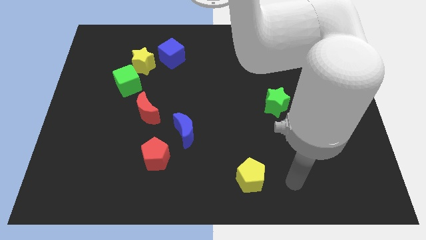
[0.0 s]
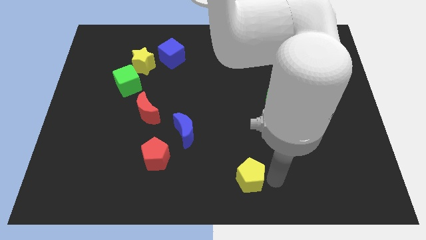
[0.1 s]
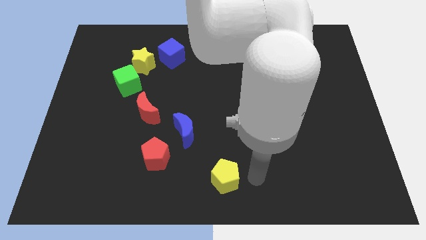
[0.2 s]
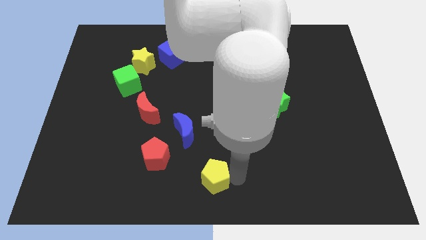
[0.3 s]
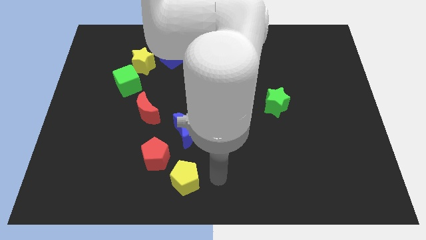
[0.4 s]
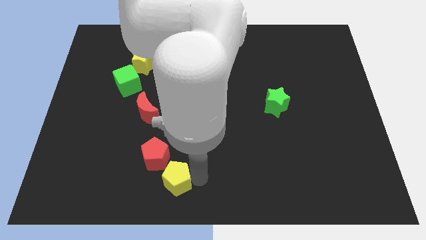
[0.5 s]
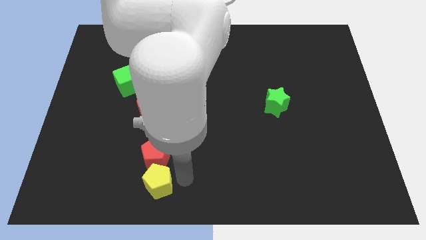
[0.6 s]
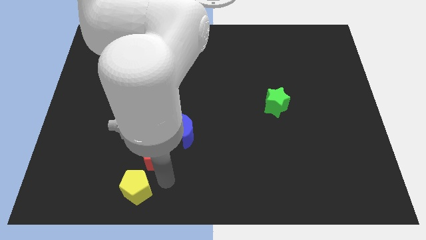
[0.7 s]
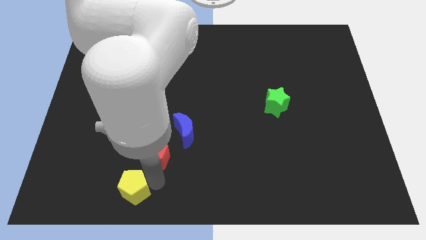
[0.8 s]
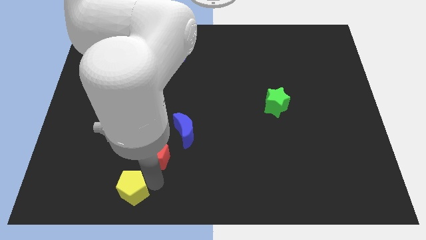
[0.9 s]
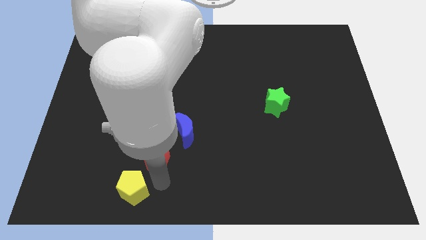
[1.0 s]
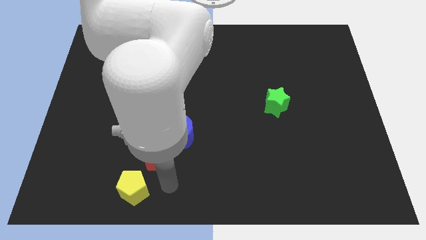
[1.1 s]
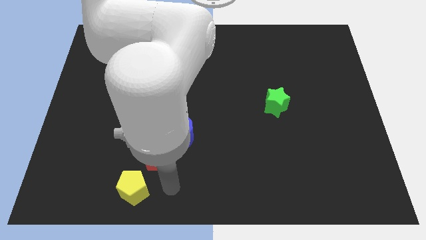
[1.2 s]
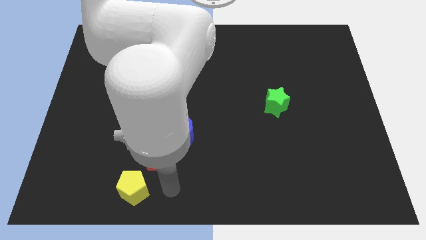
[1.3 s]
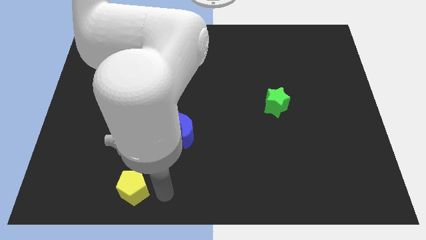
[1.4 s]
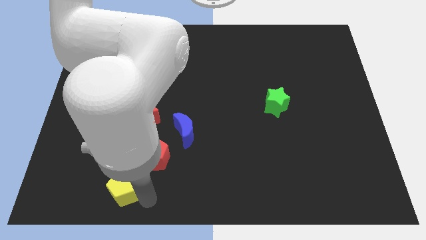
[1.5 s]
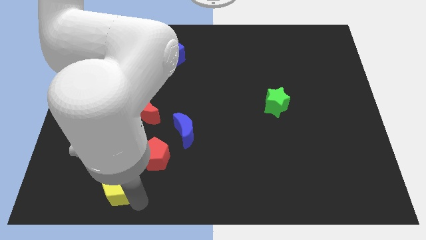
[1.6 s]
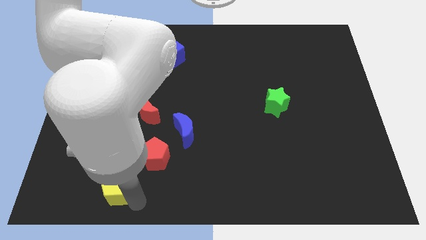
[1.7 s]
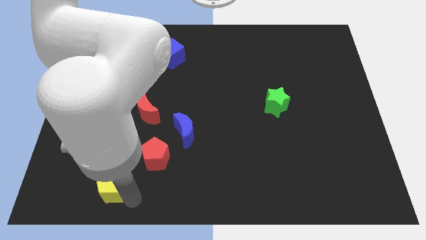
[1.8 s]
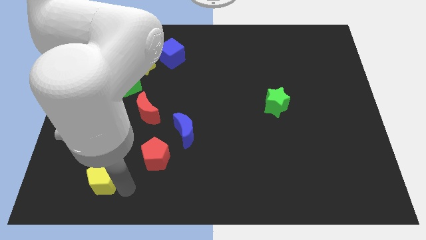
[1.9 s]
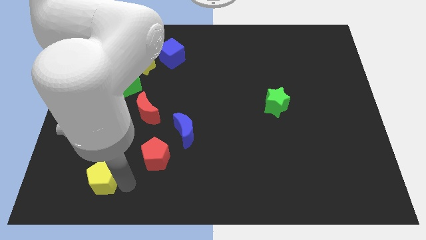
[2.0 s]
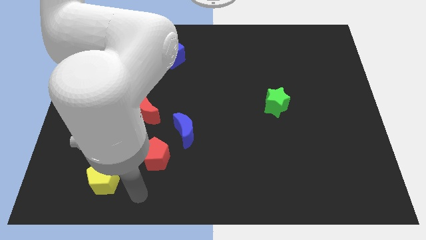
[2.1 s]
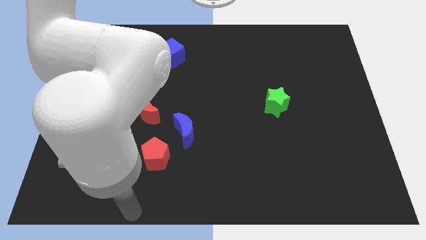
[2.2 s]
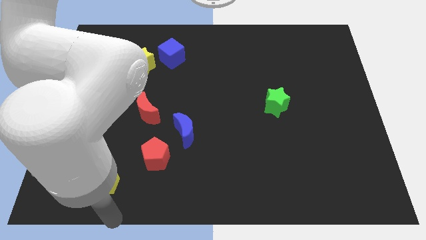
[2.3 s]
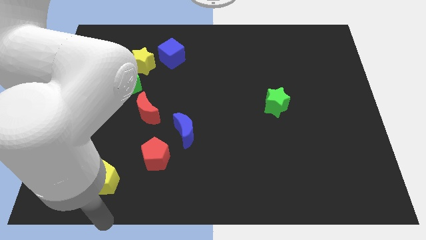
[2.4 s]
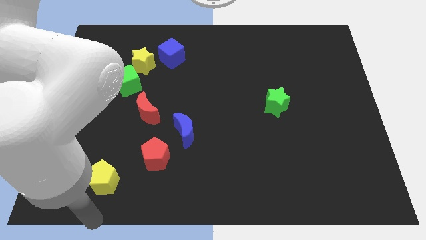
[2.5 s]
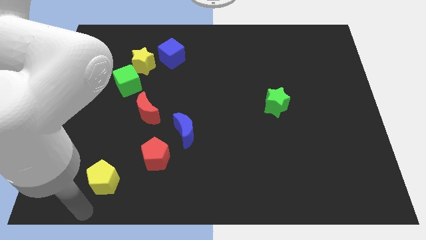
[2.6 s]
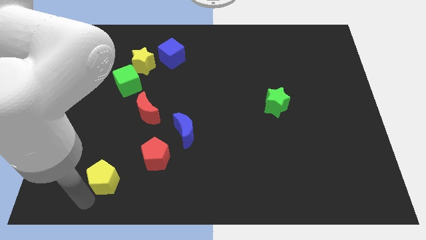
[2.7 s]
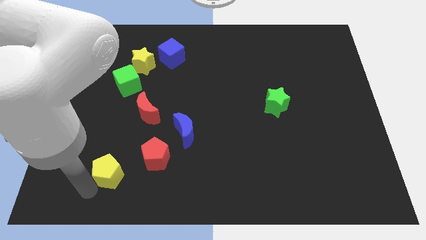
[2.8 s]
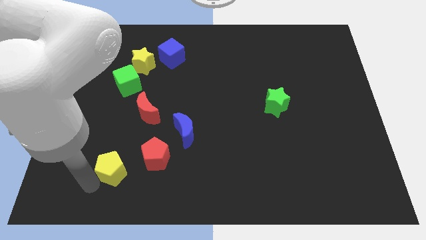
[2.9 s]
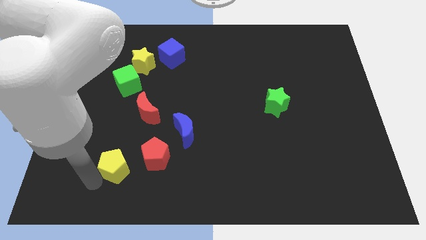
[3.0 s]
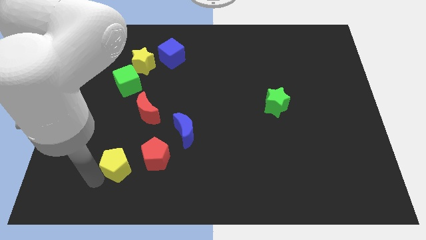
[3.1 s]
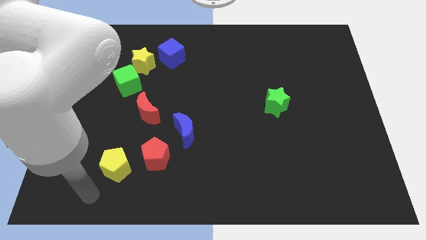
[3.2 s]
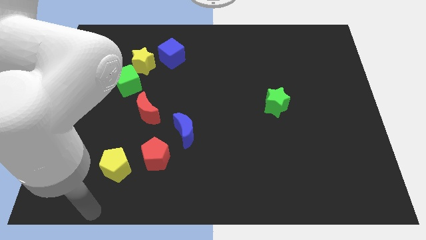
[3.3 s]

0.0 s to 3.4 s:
move the yellow pentagon to the left of the red pentagon

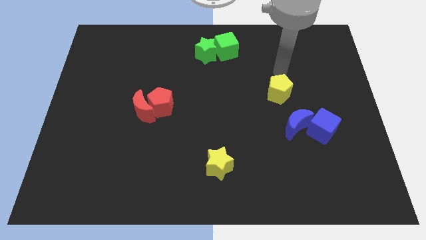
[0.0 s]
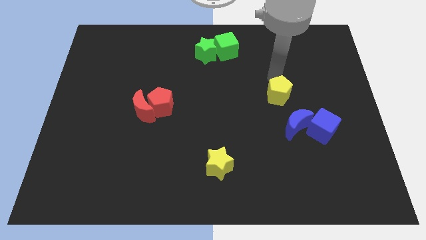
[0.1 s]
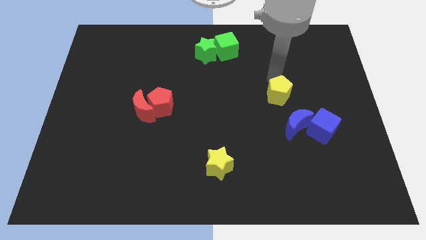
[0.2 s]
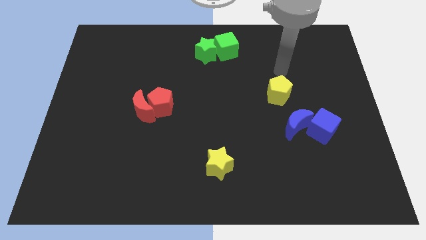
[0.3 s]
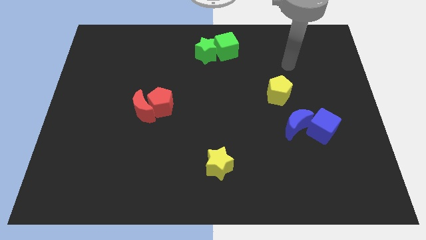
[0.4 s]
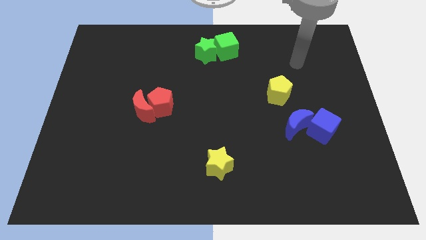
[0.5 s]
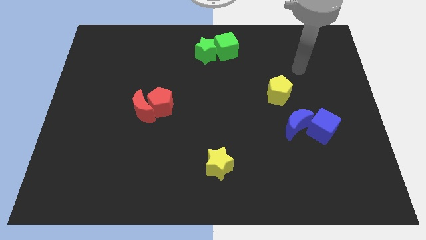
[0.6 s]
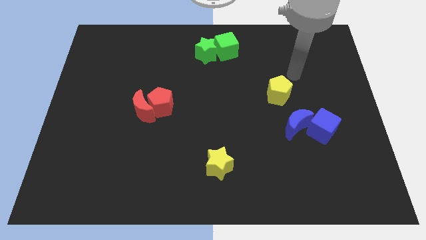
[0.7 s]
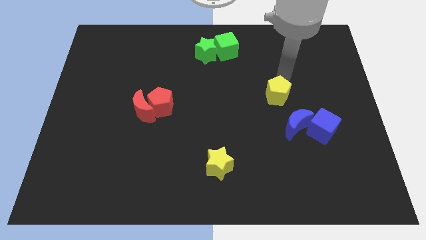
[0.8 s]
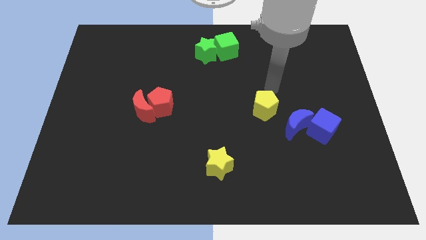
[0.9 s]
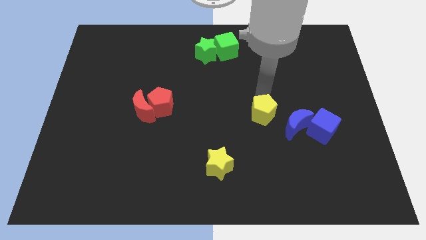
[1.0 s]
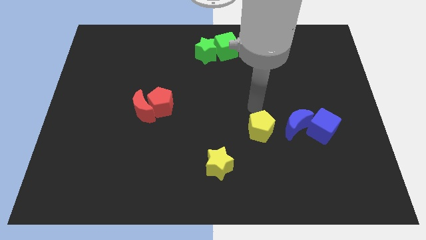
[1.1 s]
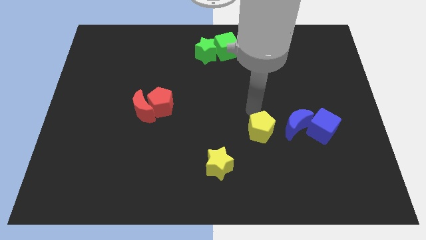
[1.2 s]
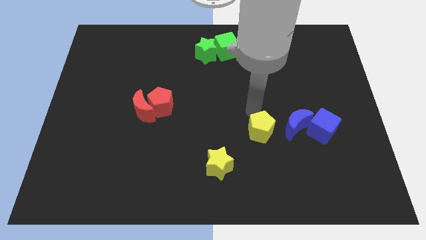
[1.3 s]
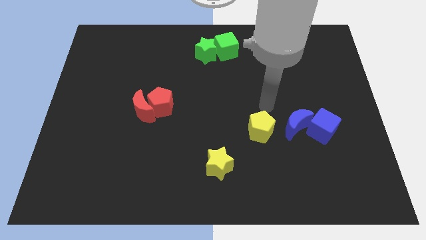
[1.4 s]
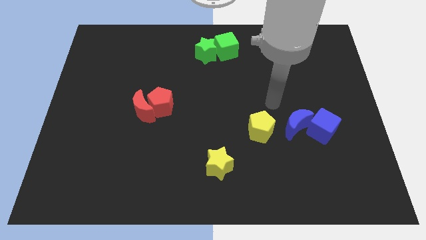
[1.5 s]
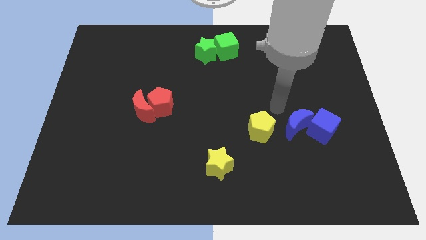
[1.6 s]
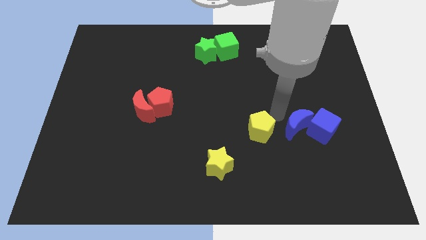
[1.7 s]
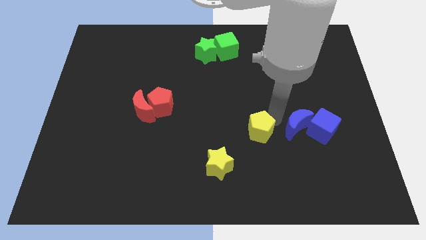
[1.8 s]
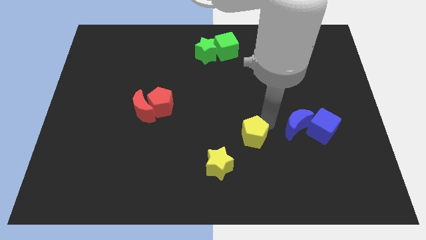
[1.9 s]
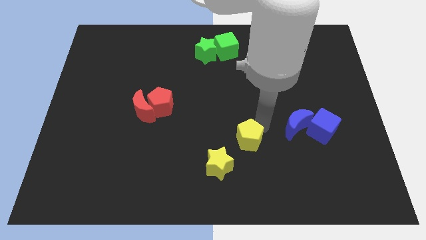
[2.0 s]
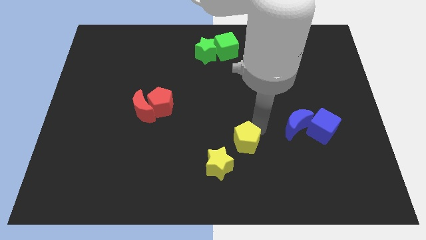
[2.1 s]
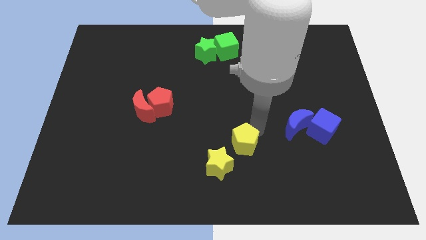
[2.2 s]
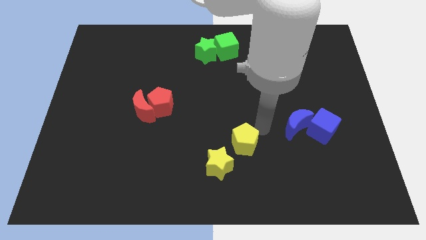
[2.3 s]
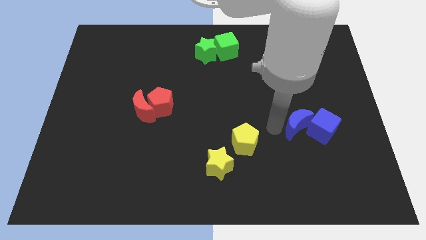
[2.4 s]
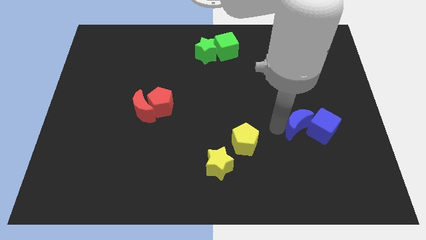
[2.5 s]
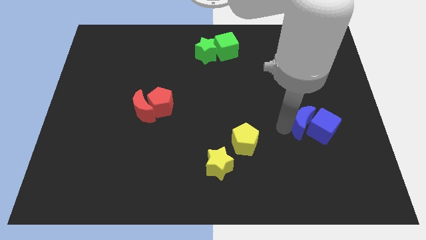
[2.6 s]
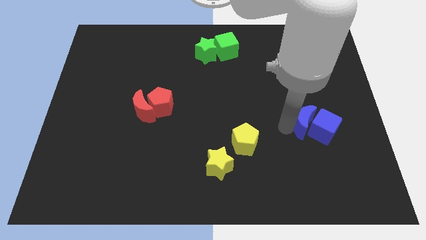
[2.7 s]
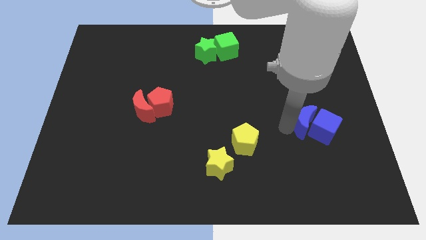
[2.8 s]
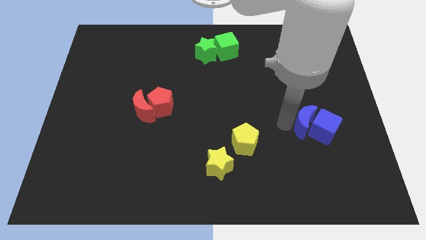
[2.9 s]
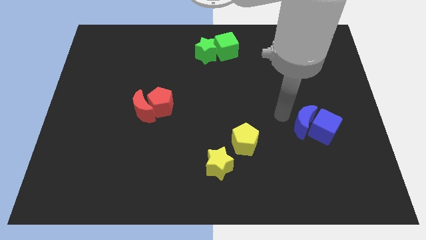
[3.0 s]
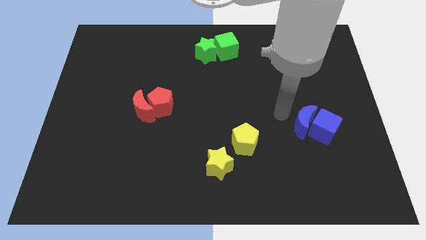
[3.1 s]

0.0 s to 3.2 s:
place the yellow pentagon diagonally to the yellow star

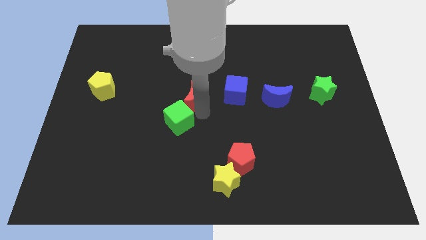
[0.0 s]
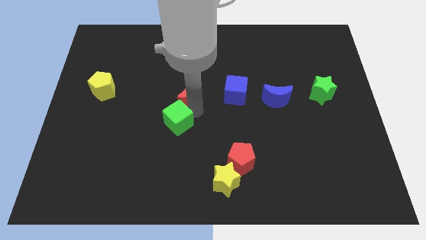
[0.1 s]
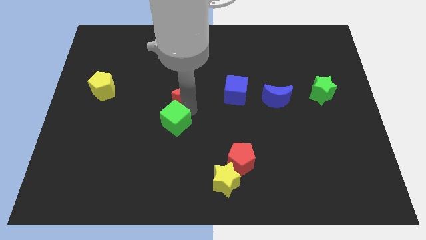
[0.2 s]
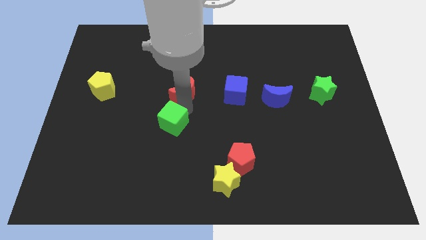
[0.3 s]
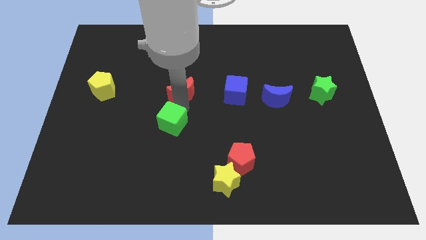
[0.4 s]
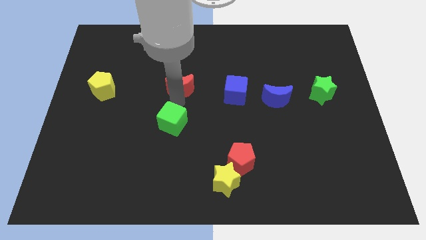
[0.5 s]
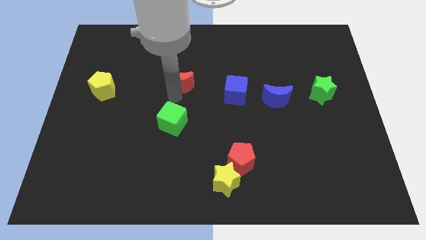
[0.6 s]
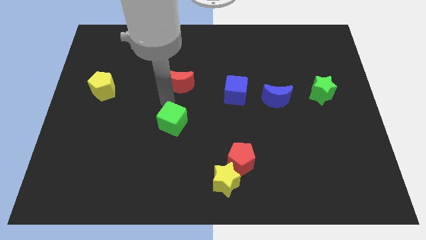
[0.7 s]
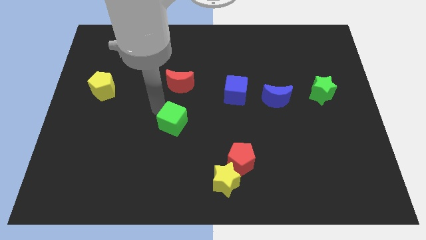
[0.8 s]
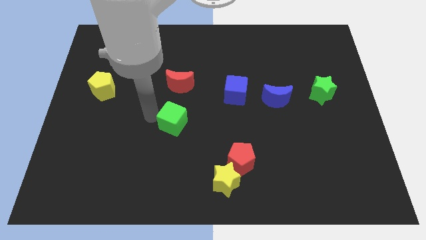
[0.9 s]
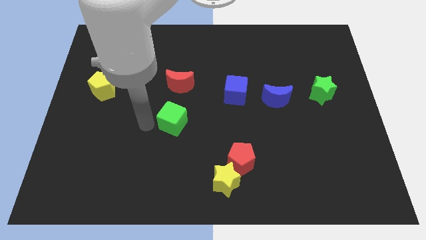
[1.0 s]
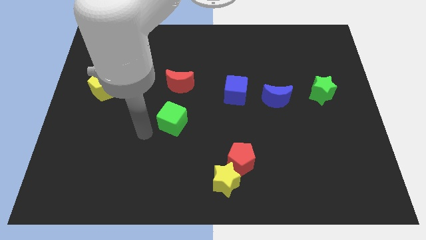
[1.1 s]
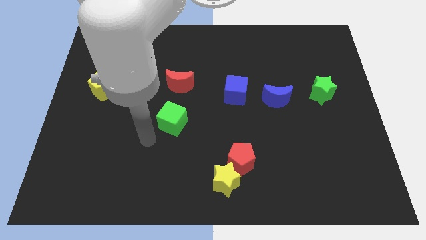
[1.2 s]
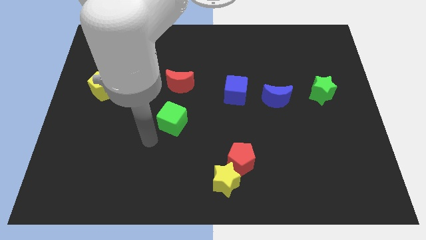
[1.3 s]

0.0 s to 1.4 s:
separate the red moon from the green cube

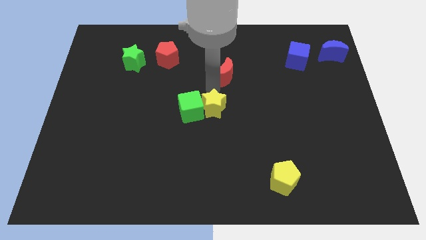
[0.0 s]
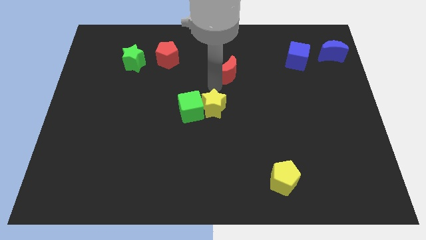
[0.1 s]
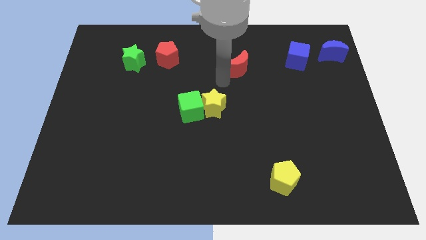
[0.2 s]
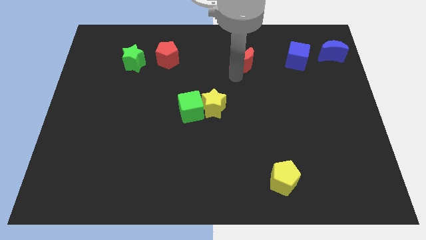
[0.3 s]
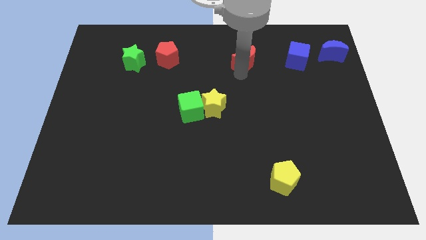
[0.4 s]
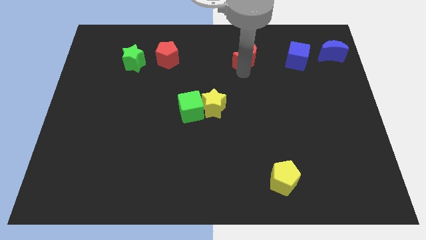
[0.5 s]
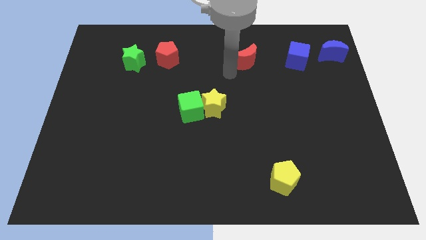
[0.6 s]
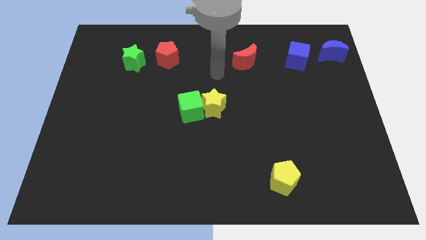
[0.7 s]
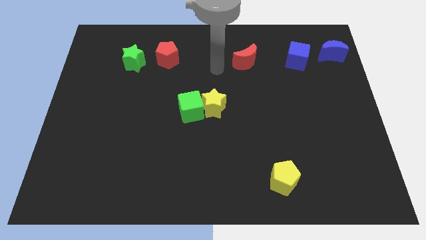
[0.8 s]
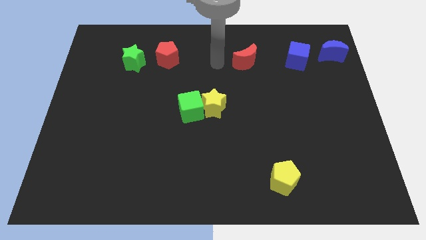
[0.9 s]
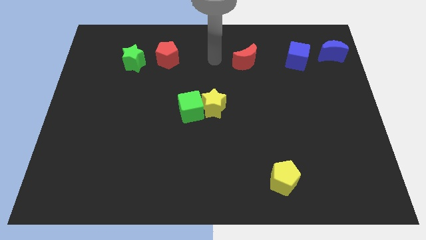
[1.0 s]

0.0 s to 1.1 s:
put the red moon horizontally to the right side of the blue cube
